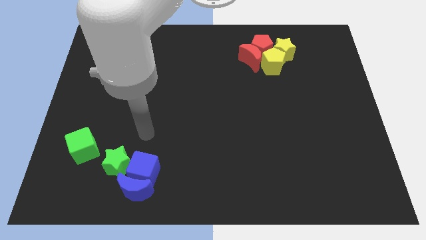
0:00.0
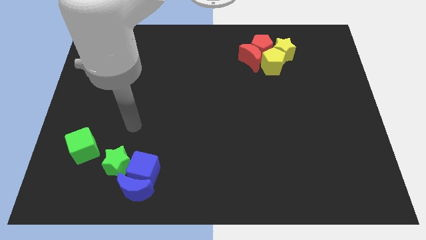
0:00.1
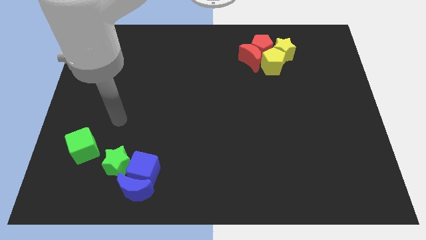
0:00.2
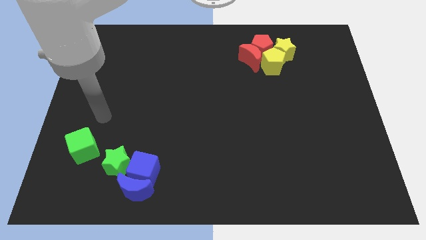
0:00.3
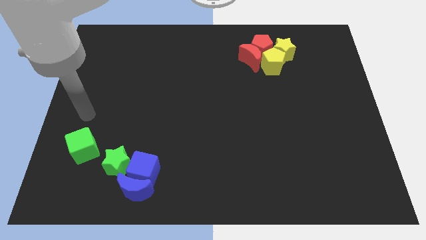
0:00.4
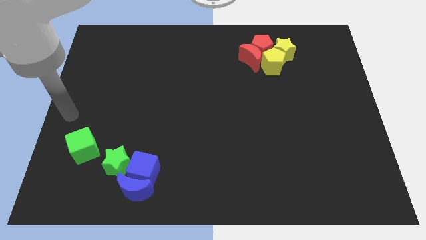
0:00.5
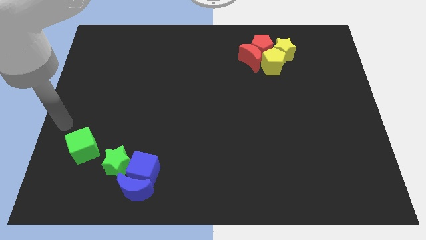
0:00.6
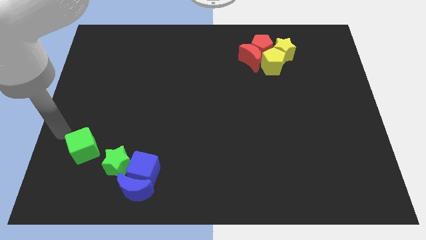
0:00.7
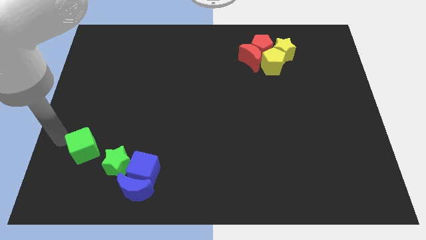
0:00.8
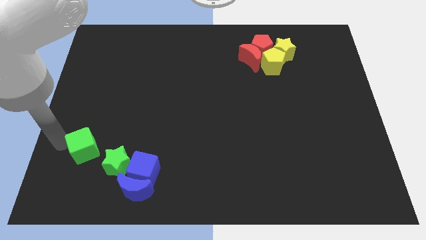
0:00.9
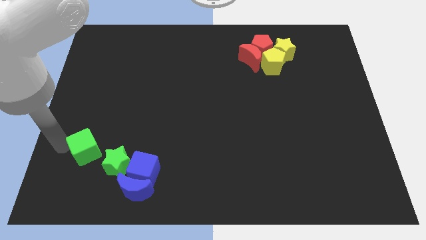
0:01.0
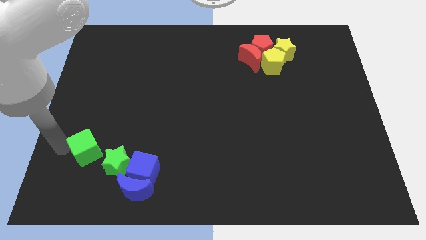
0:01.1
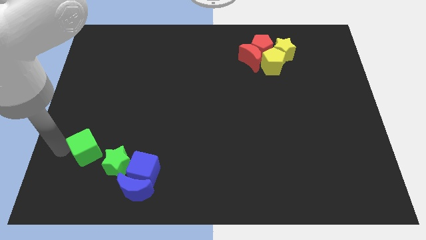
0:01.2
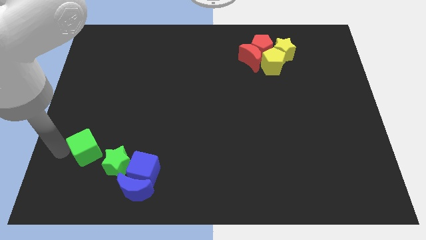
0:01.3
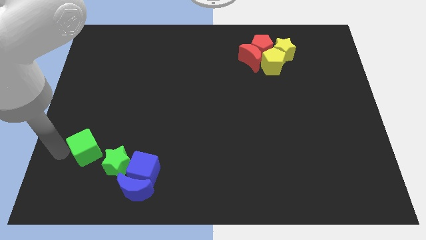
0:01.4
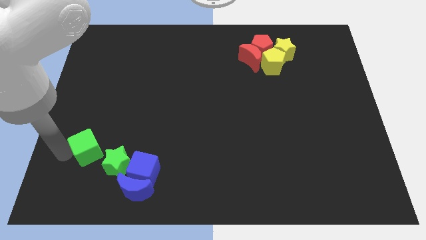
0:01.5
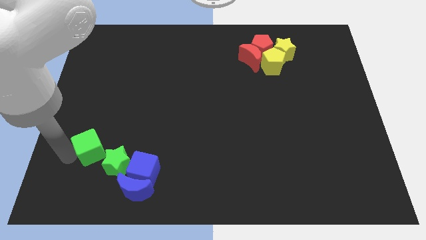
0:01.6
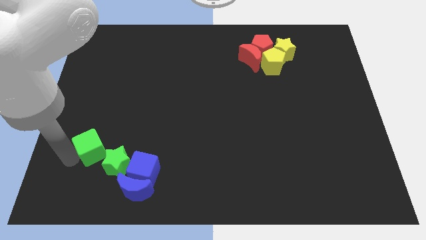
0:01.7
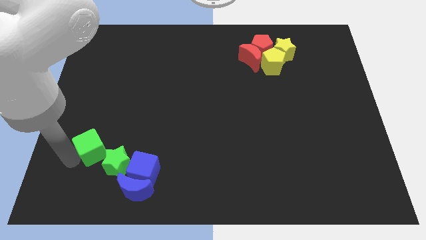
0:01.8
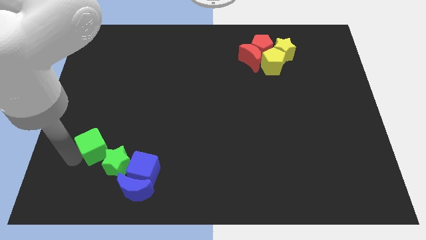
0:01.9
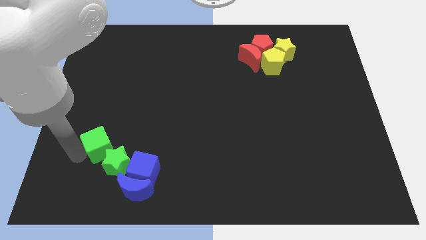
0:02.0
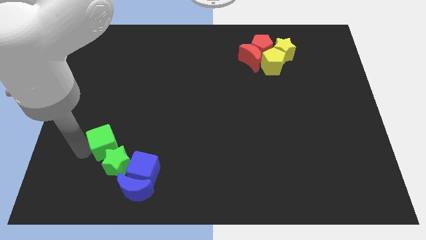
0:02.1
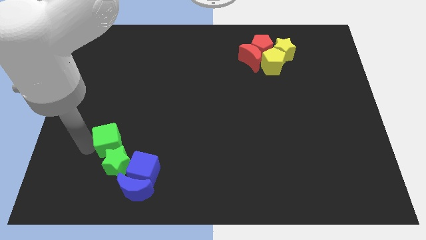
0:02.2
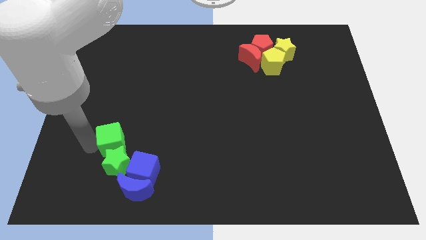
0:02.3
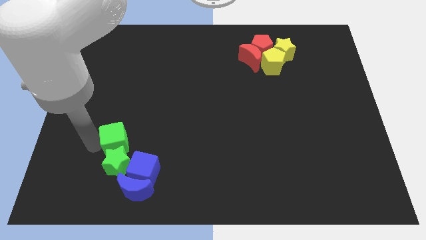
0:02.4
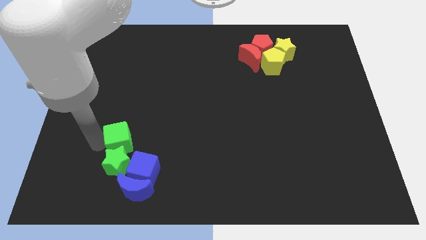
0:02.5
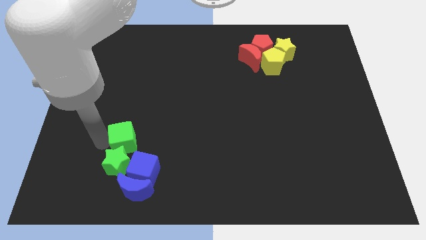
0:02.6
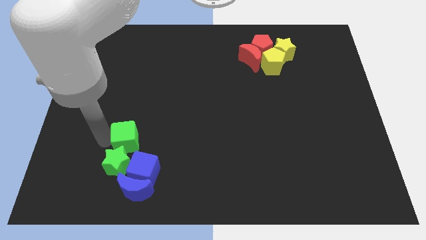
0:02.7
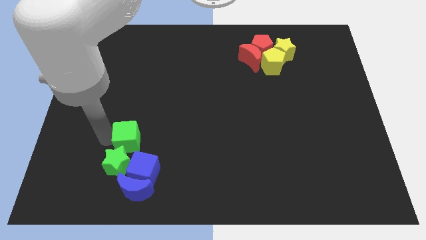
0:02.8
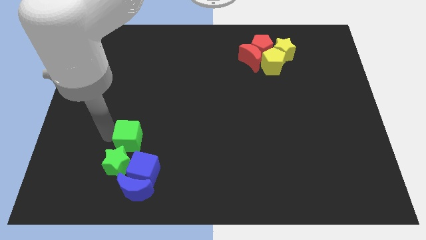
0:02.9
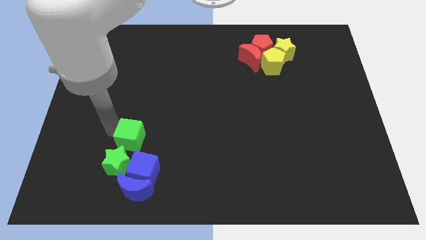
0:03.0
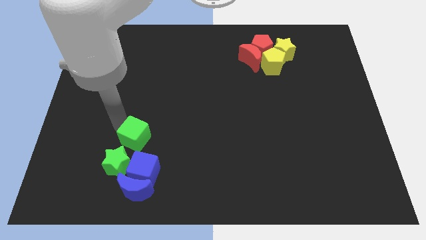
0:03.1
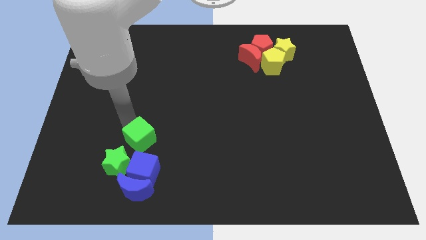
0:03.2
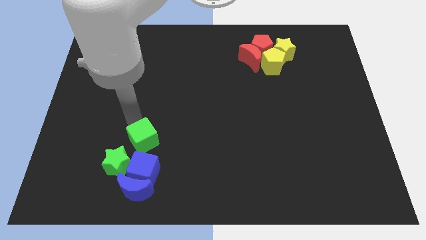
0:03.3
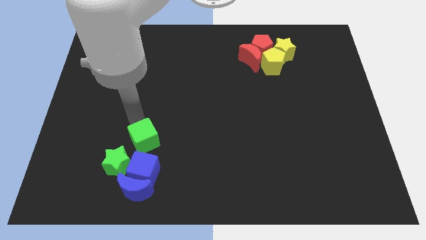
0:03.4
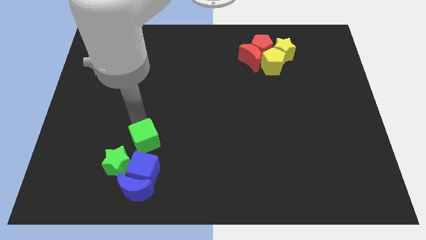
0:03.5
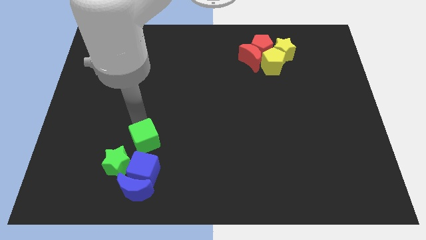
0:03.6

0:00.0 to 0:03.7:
place the green cube above the blue cube

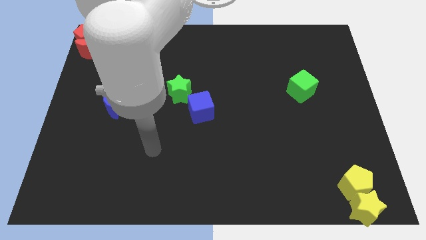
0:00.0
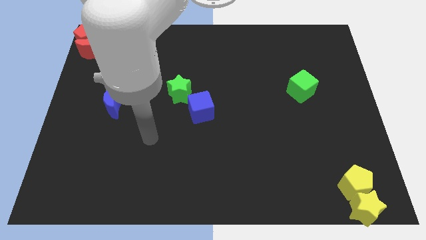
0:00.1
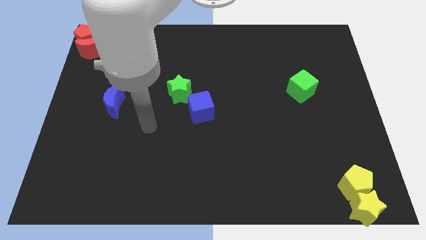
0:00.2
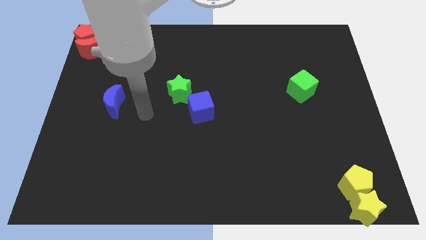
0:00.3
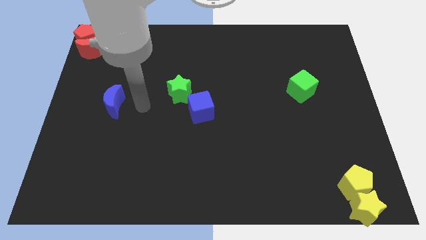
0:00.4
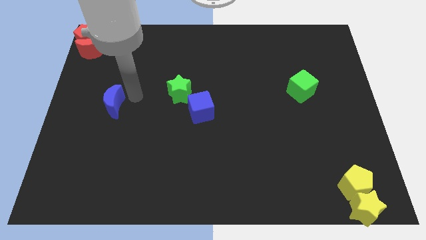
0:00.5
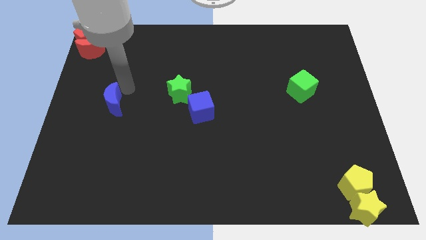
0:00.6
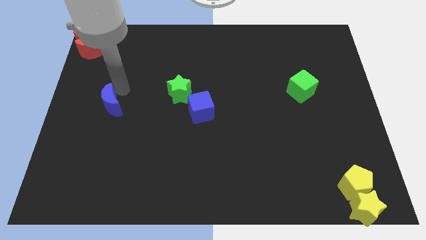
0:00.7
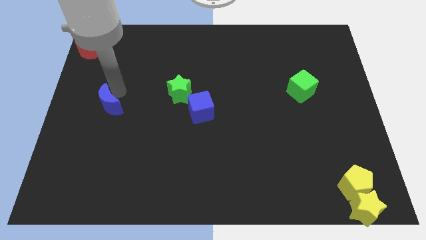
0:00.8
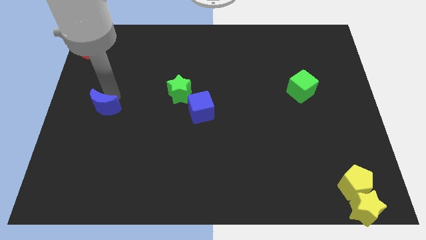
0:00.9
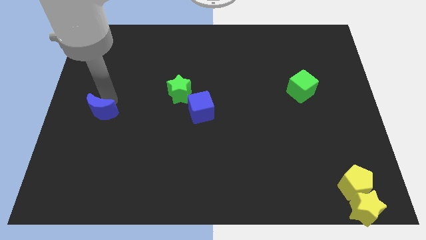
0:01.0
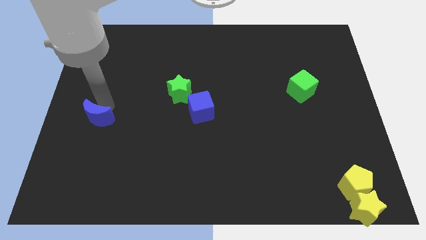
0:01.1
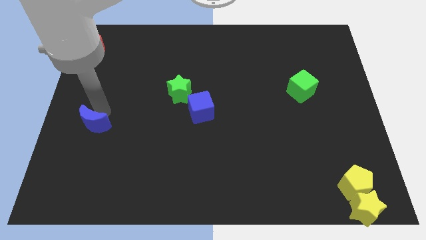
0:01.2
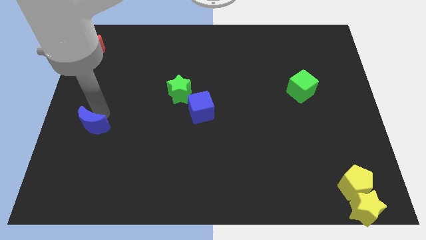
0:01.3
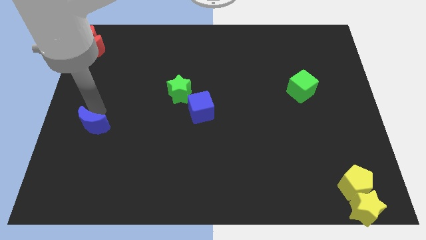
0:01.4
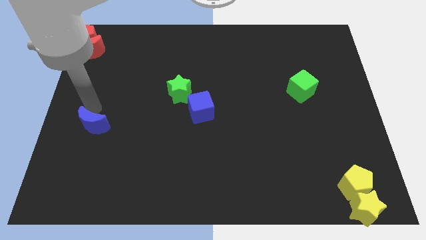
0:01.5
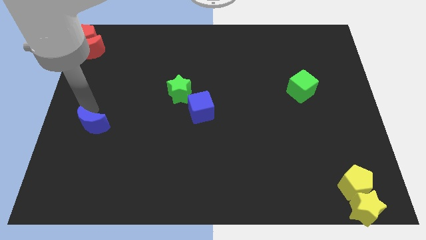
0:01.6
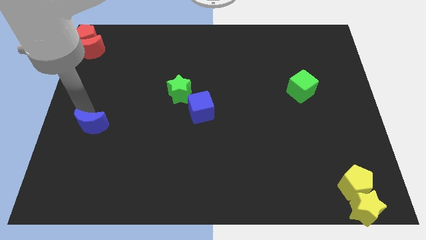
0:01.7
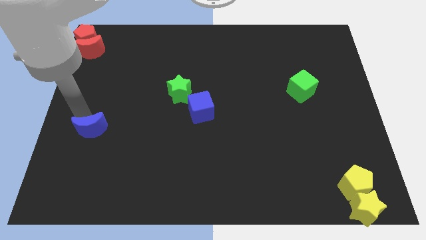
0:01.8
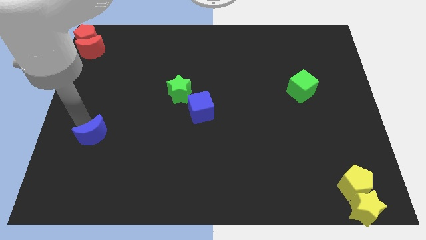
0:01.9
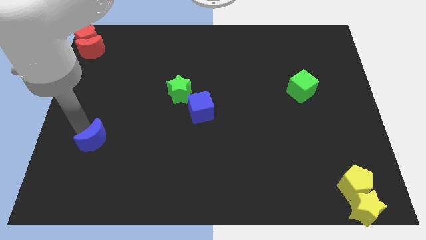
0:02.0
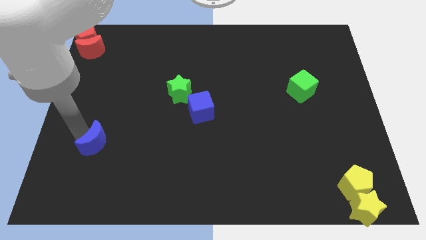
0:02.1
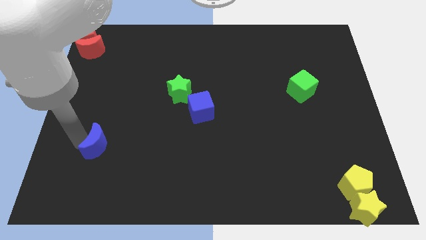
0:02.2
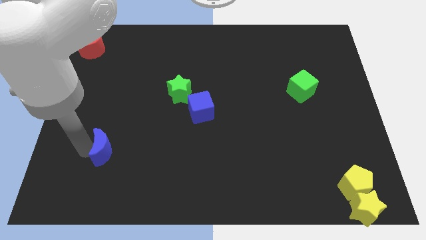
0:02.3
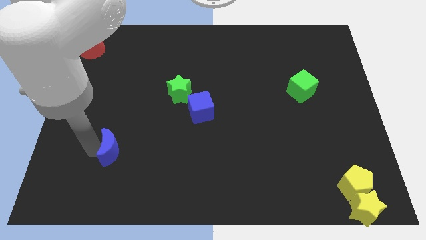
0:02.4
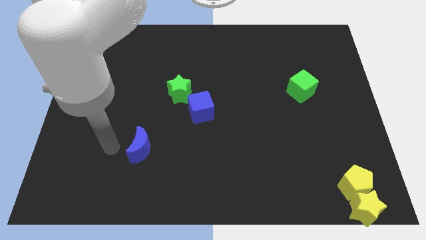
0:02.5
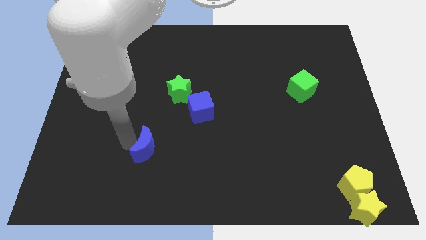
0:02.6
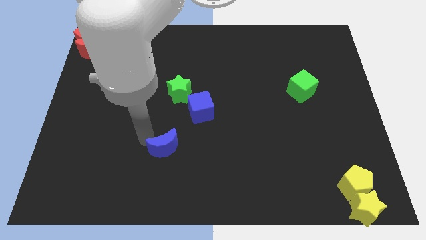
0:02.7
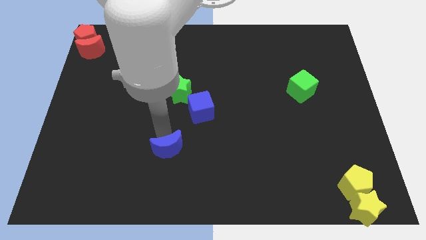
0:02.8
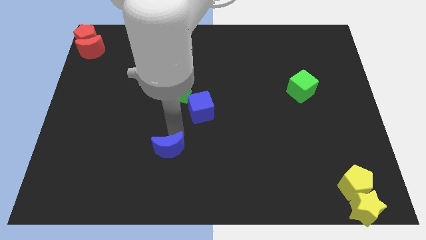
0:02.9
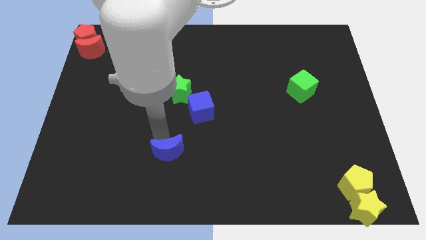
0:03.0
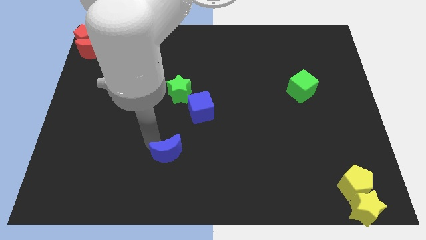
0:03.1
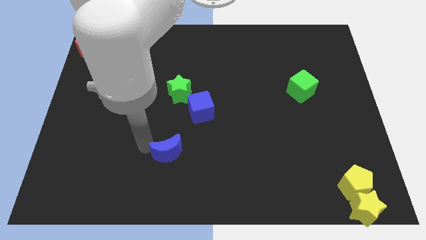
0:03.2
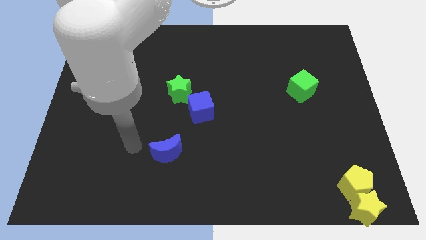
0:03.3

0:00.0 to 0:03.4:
move the blue crescent towards the blue cube

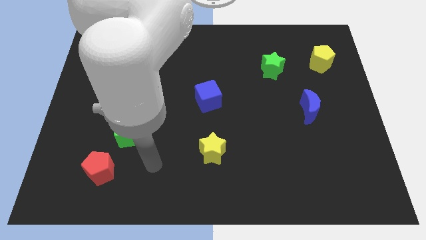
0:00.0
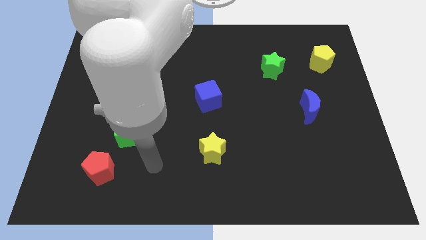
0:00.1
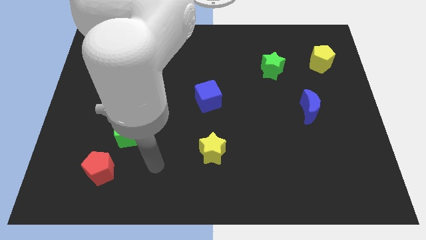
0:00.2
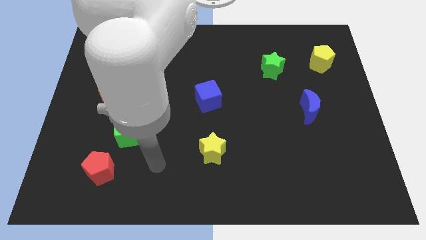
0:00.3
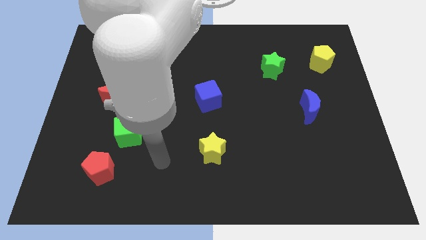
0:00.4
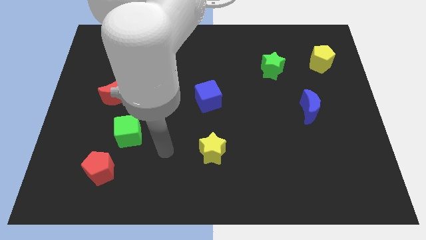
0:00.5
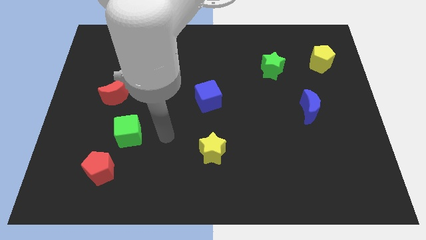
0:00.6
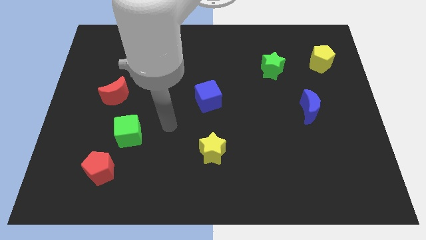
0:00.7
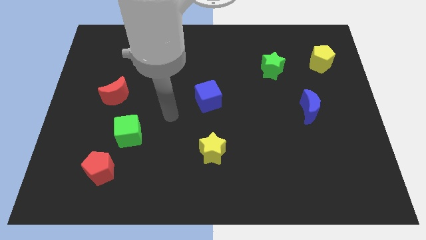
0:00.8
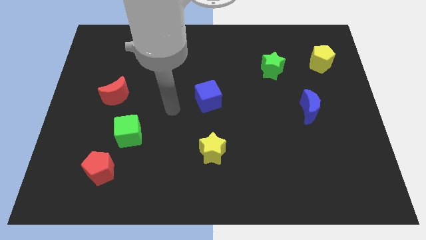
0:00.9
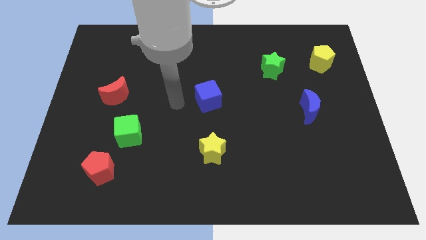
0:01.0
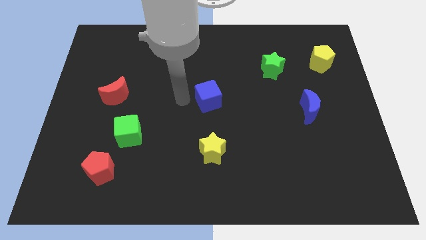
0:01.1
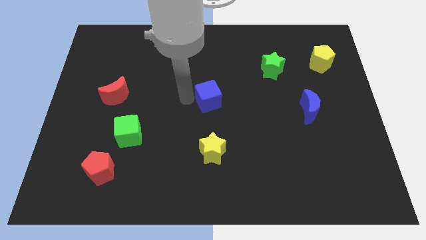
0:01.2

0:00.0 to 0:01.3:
place arm on the left side of blue cube

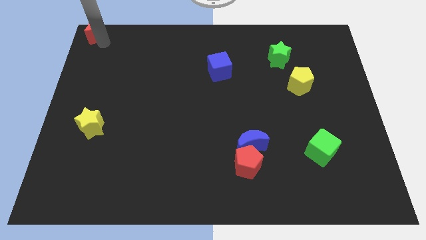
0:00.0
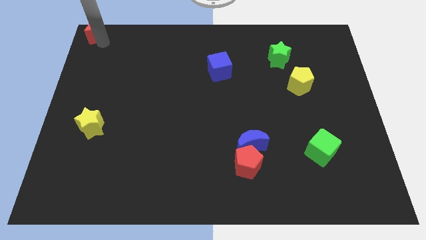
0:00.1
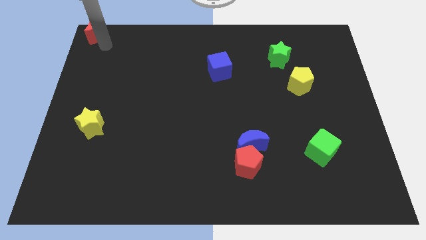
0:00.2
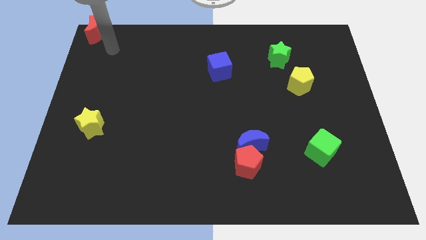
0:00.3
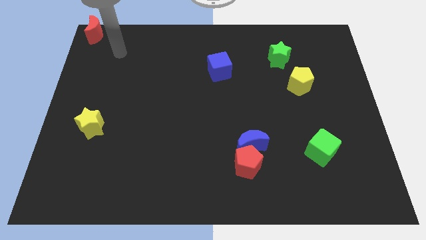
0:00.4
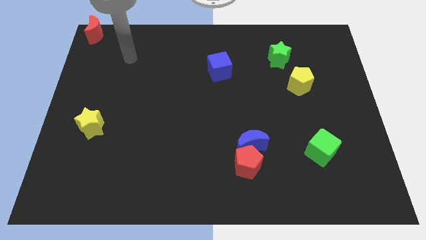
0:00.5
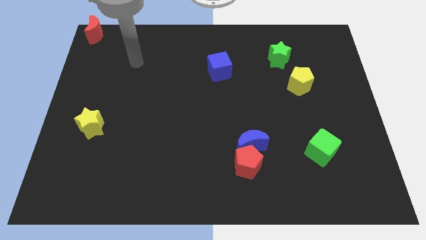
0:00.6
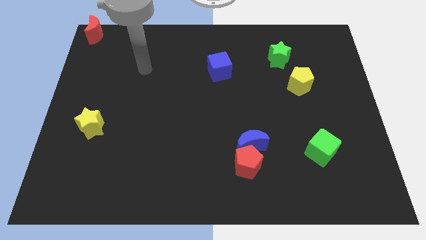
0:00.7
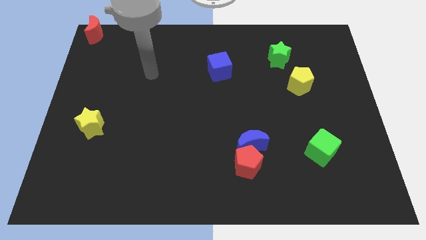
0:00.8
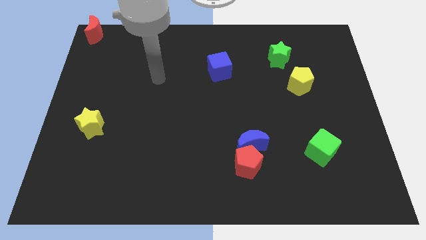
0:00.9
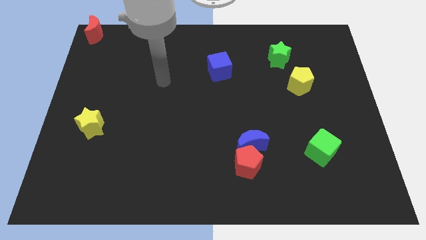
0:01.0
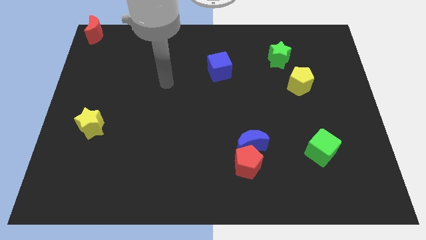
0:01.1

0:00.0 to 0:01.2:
move your arm away from red crescent
